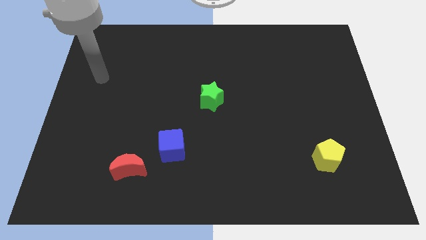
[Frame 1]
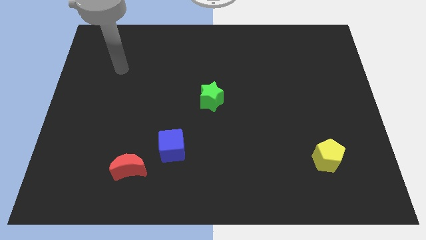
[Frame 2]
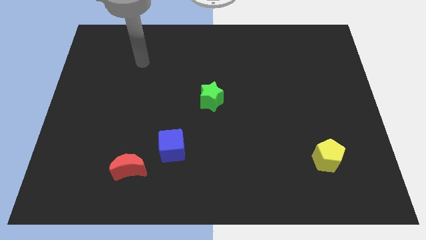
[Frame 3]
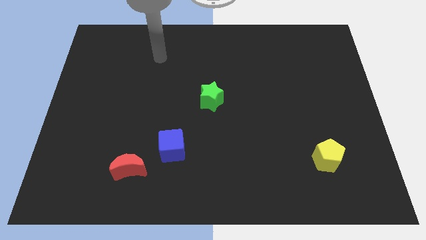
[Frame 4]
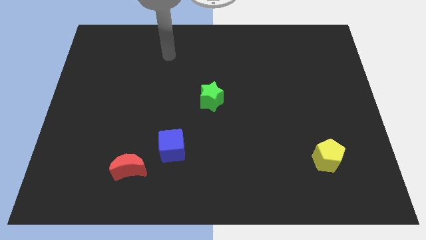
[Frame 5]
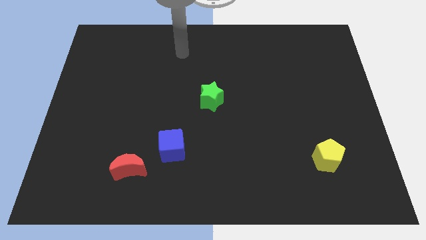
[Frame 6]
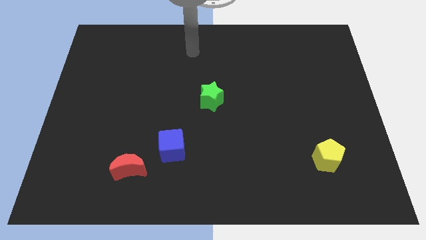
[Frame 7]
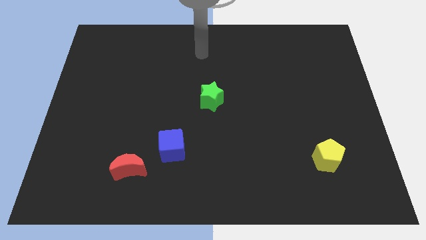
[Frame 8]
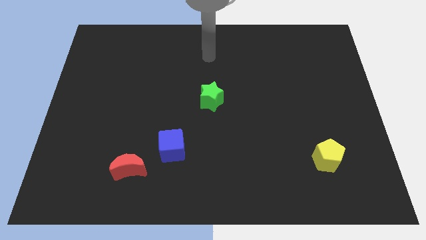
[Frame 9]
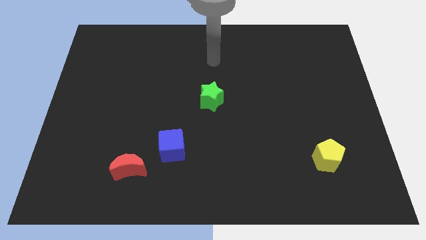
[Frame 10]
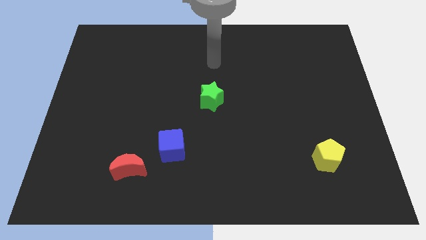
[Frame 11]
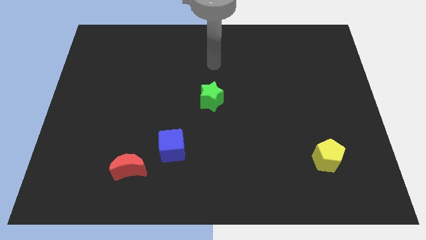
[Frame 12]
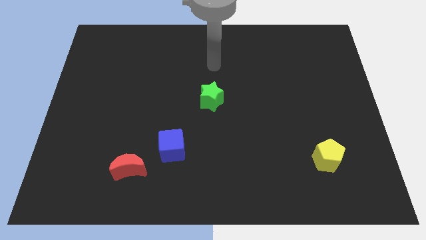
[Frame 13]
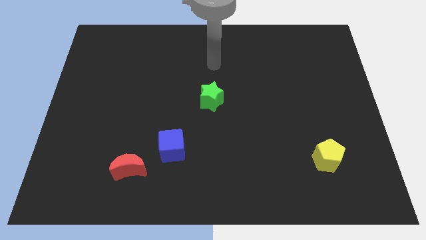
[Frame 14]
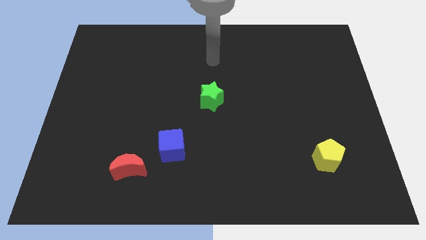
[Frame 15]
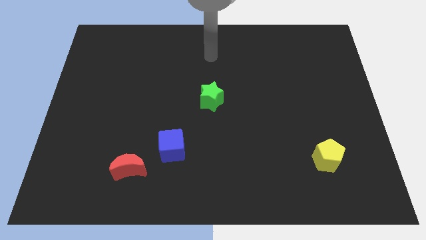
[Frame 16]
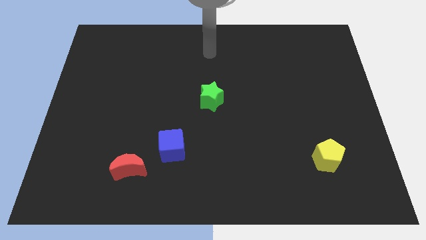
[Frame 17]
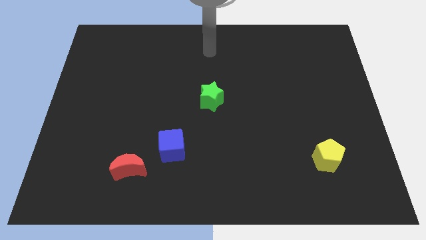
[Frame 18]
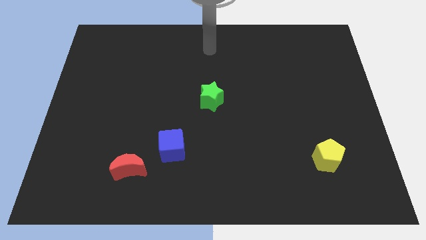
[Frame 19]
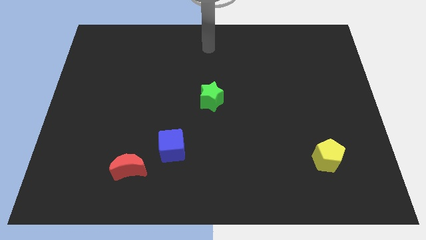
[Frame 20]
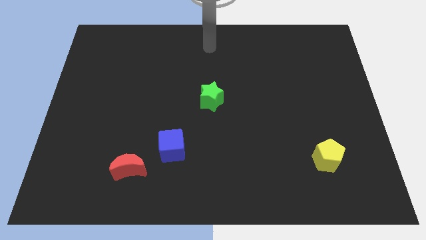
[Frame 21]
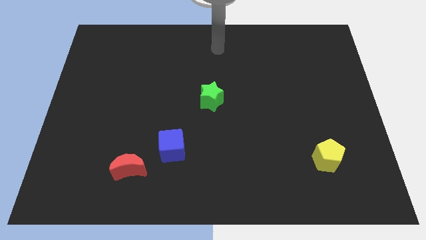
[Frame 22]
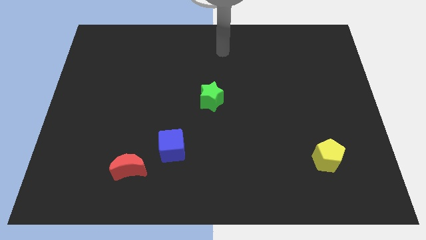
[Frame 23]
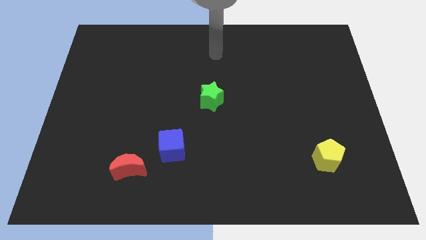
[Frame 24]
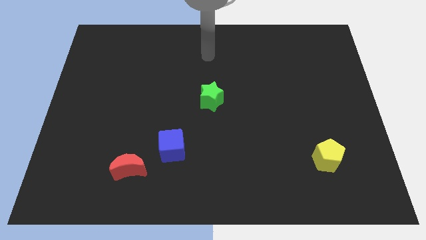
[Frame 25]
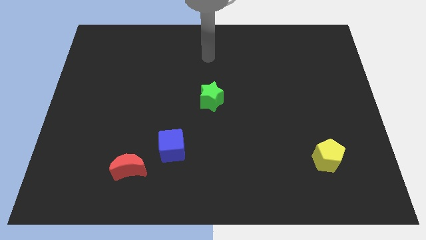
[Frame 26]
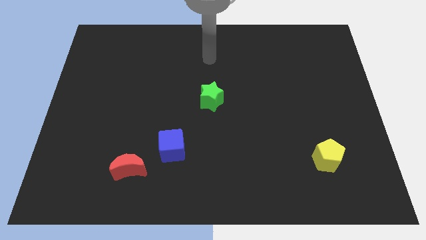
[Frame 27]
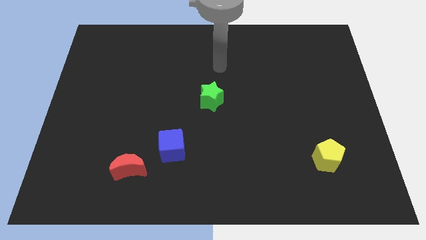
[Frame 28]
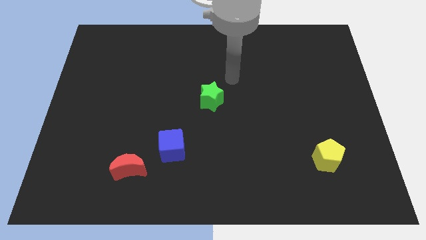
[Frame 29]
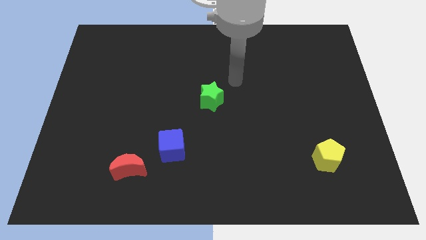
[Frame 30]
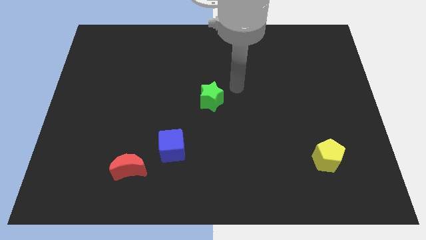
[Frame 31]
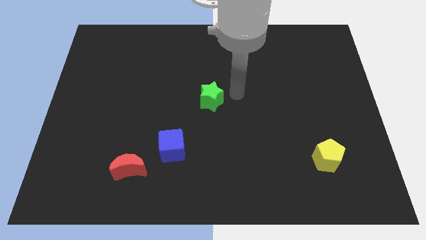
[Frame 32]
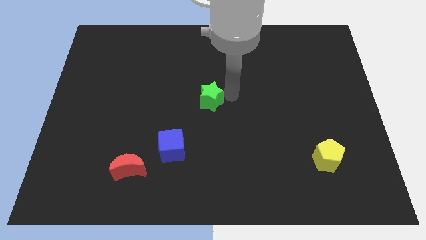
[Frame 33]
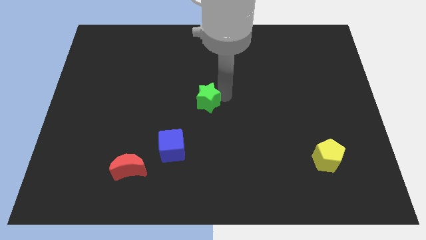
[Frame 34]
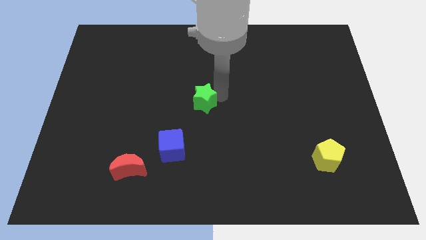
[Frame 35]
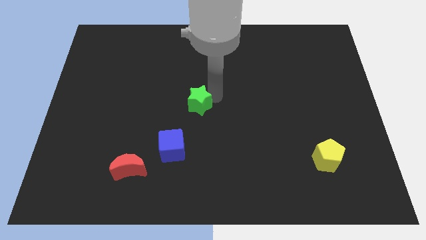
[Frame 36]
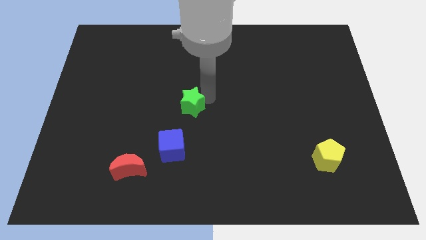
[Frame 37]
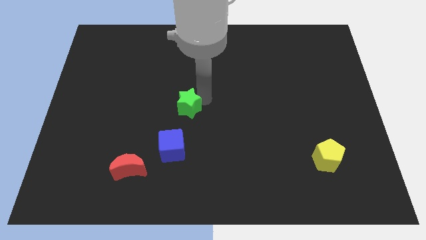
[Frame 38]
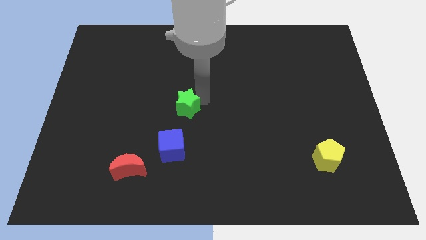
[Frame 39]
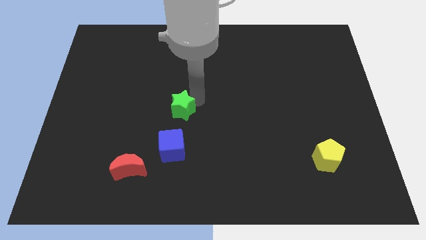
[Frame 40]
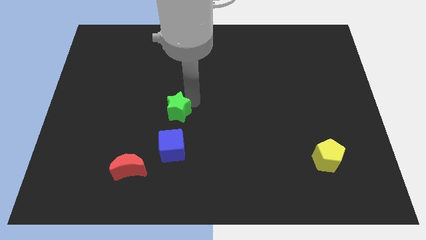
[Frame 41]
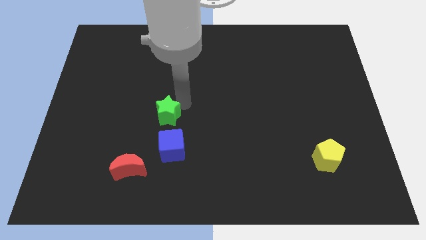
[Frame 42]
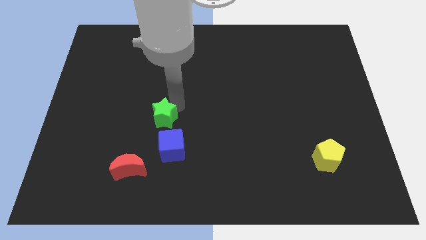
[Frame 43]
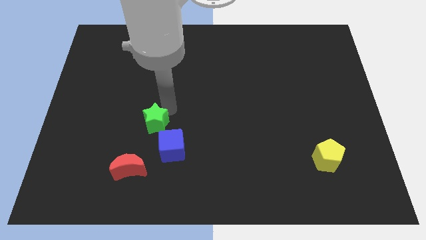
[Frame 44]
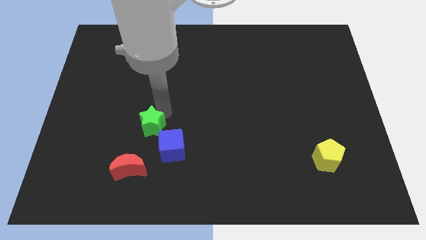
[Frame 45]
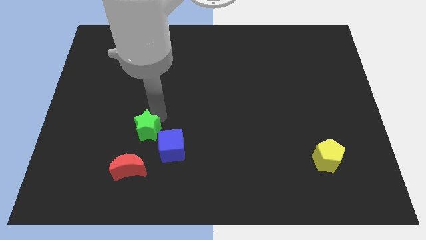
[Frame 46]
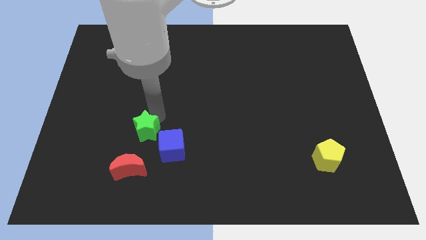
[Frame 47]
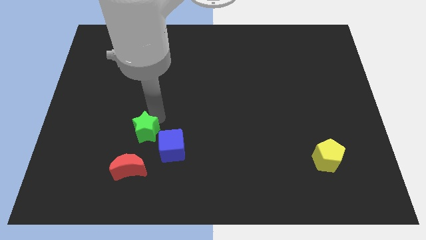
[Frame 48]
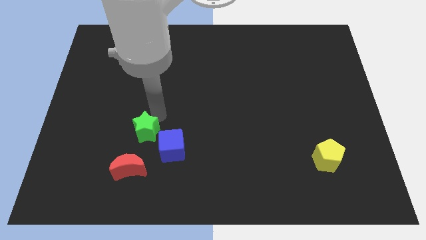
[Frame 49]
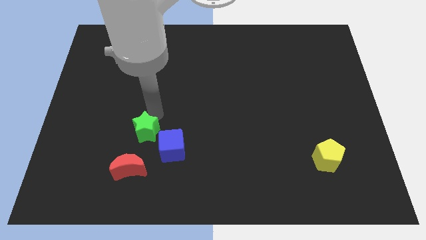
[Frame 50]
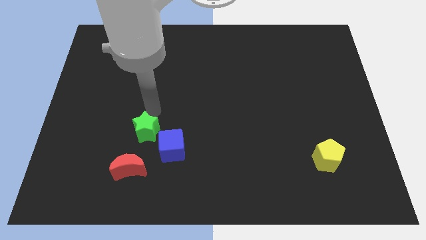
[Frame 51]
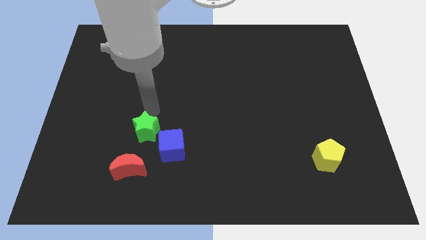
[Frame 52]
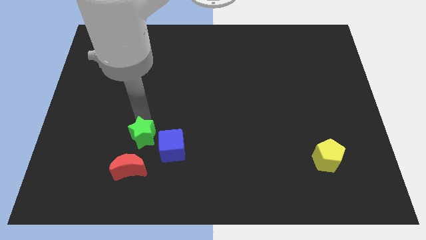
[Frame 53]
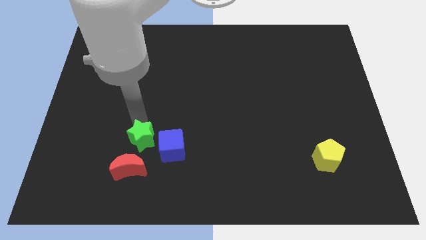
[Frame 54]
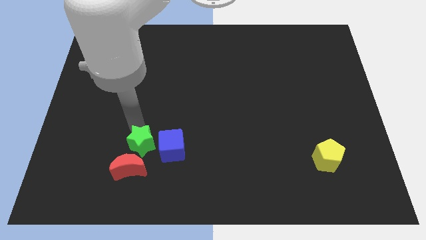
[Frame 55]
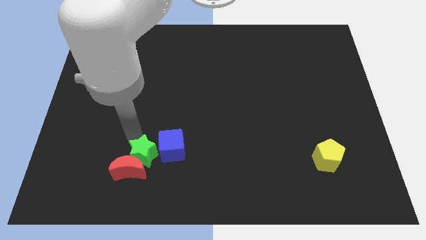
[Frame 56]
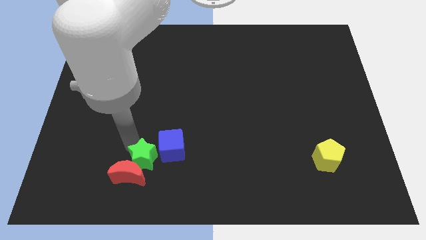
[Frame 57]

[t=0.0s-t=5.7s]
push the green star close to the red block

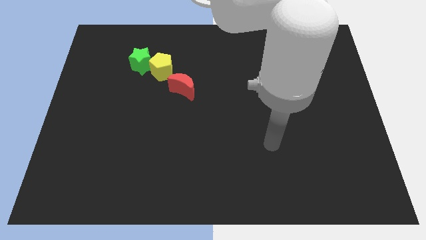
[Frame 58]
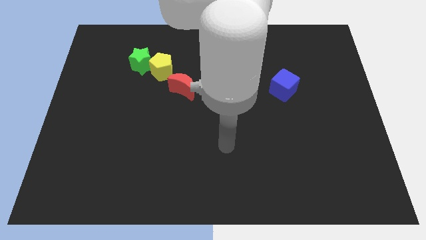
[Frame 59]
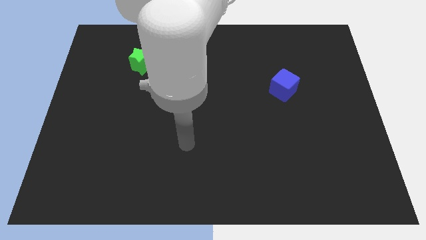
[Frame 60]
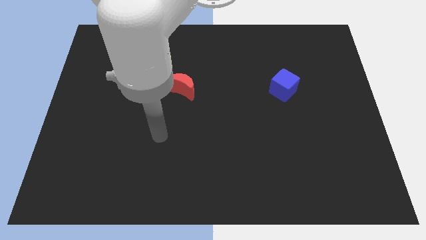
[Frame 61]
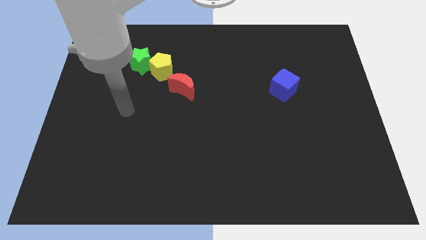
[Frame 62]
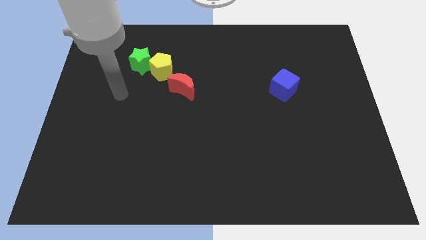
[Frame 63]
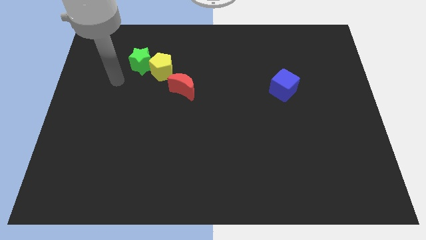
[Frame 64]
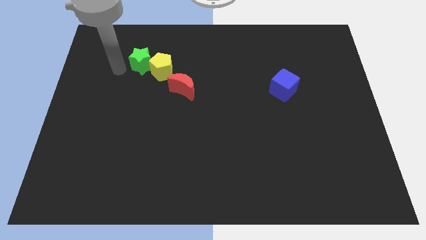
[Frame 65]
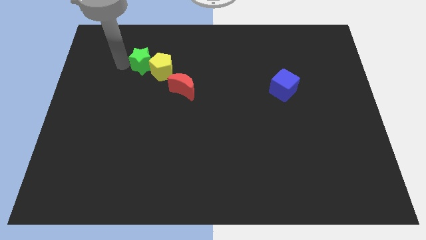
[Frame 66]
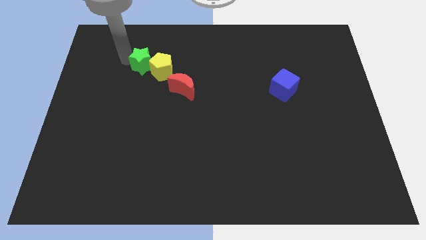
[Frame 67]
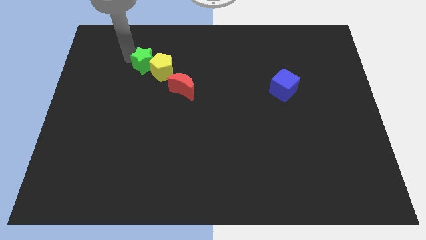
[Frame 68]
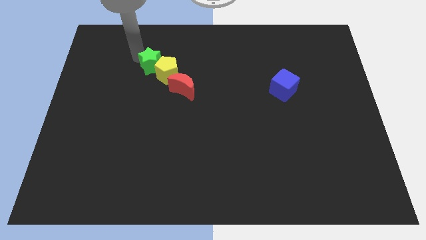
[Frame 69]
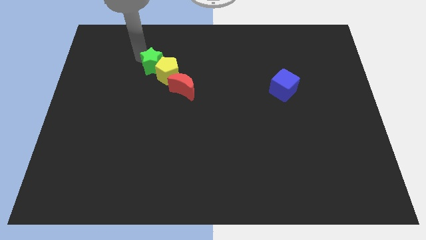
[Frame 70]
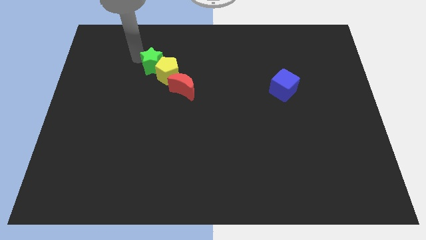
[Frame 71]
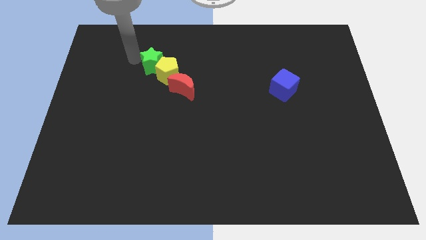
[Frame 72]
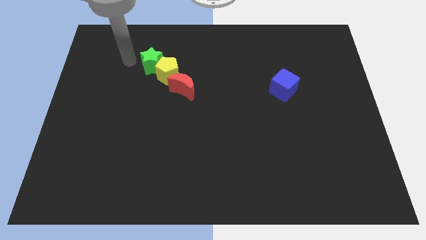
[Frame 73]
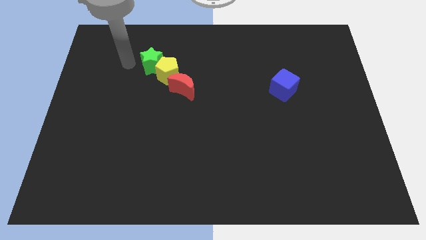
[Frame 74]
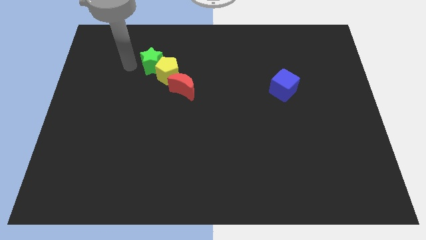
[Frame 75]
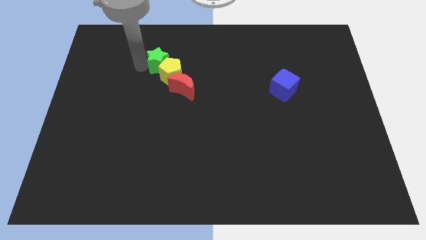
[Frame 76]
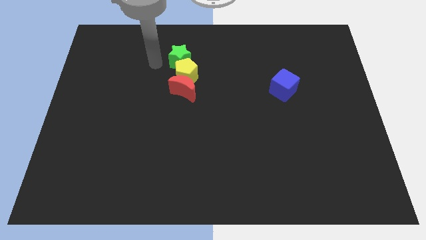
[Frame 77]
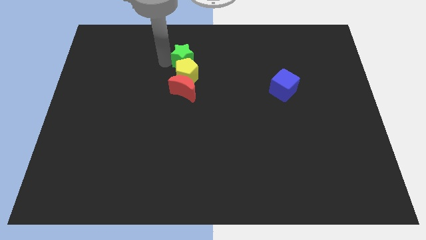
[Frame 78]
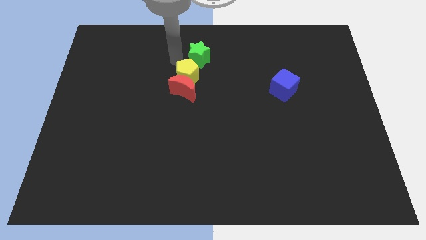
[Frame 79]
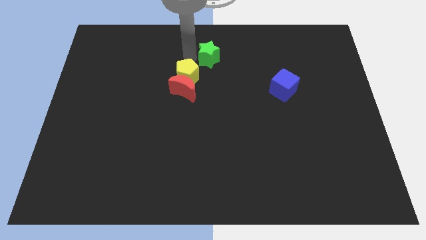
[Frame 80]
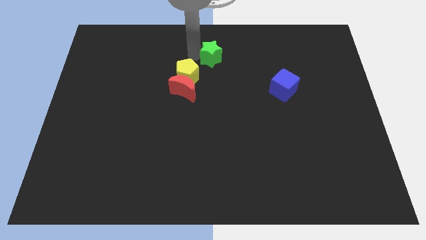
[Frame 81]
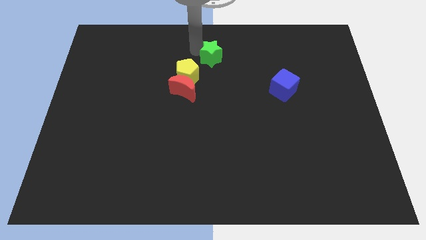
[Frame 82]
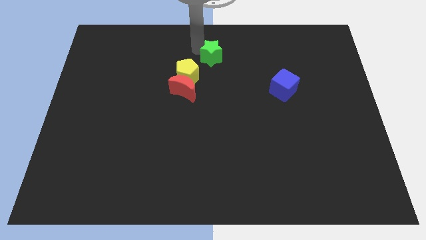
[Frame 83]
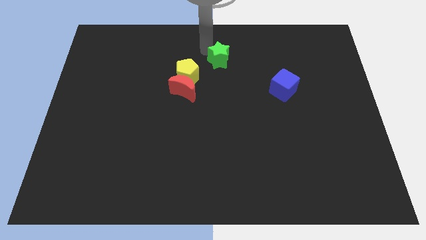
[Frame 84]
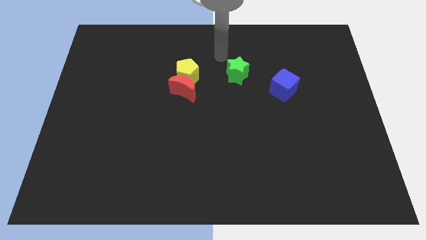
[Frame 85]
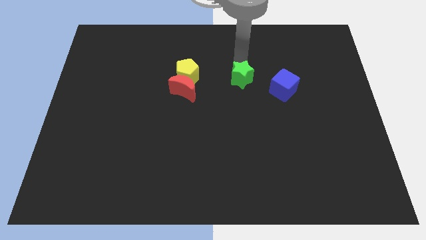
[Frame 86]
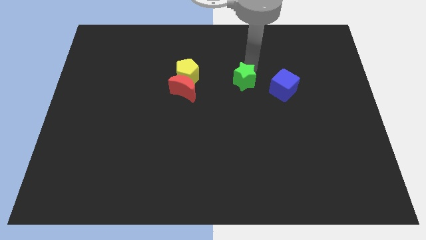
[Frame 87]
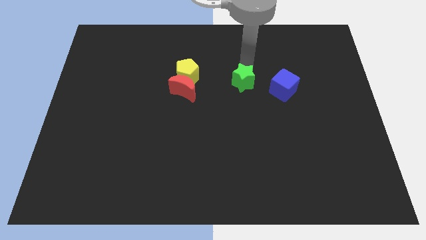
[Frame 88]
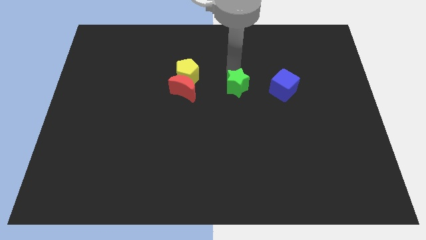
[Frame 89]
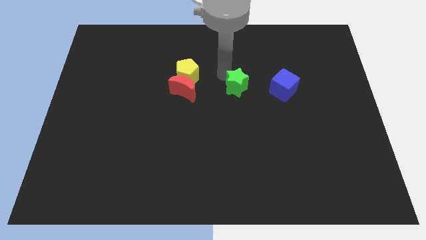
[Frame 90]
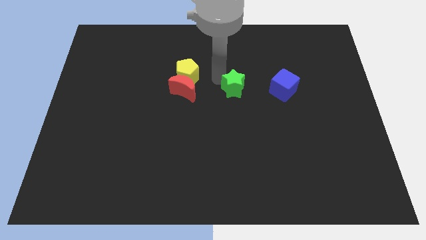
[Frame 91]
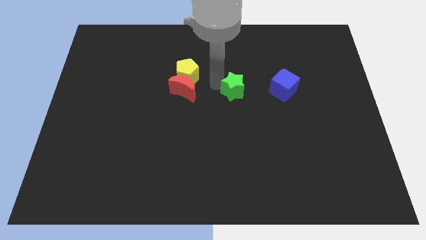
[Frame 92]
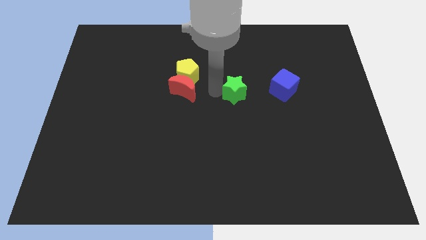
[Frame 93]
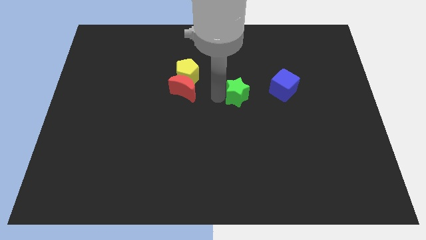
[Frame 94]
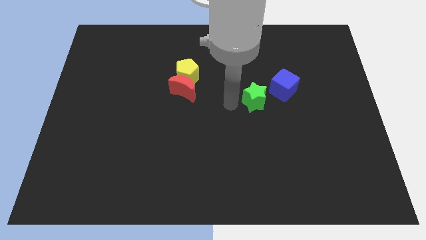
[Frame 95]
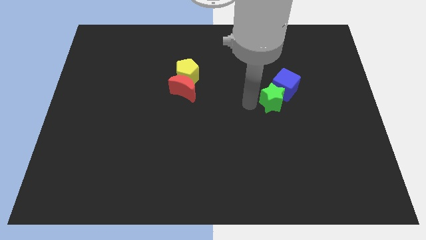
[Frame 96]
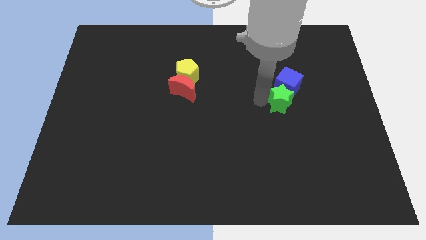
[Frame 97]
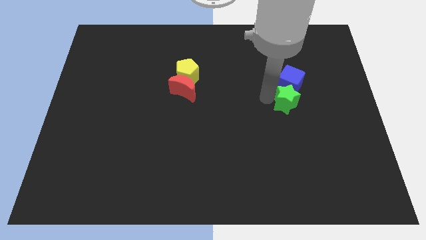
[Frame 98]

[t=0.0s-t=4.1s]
slide the star towards the blue block
